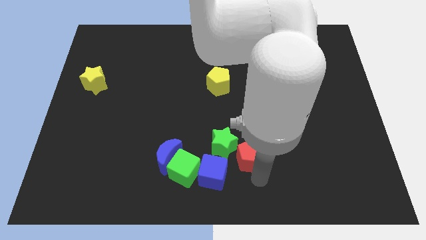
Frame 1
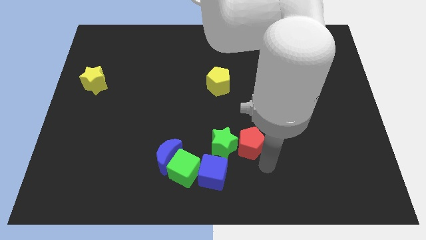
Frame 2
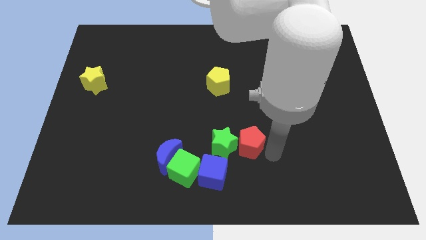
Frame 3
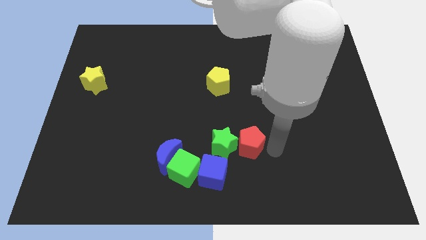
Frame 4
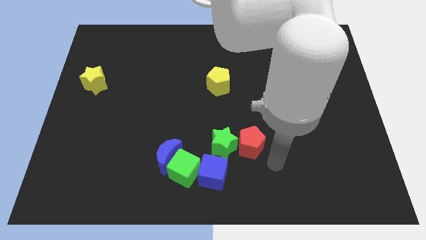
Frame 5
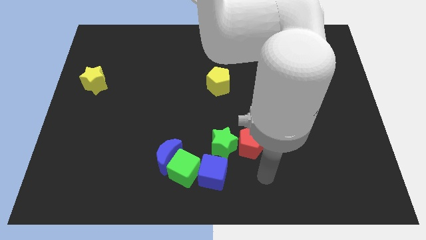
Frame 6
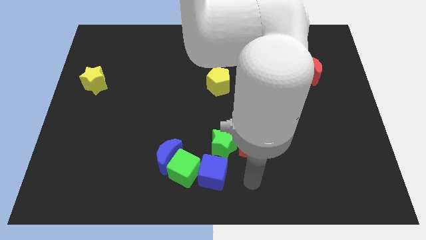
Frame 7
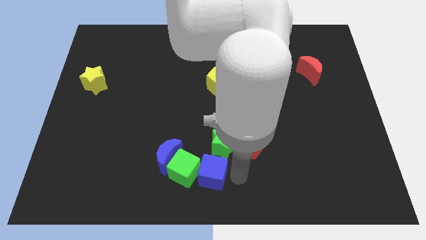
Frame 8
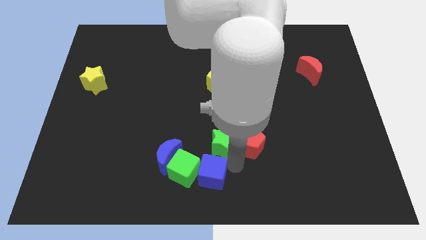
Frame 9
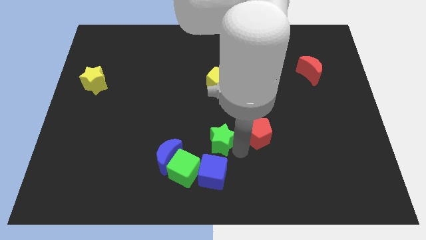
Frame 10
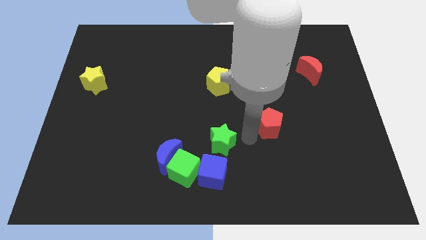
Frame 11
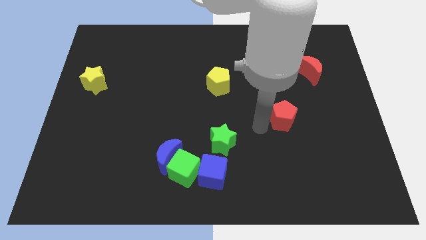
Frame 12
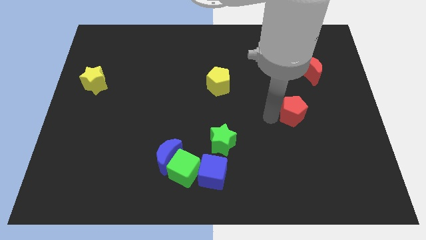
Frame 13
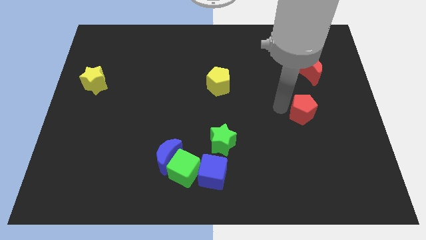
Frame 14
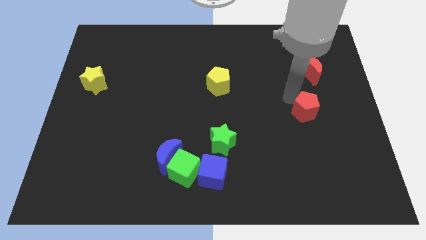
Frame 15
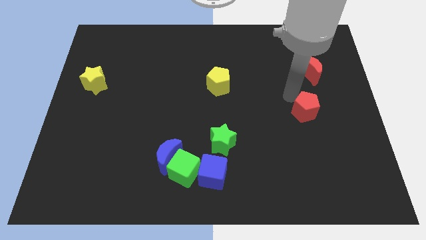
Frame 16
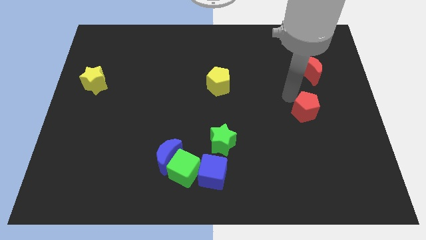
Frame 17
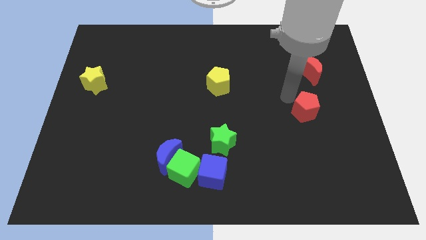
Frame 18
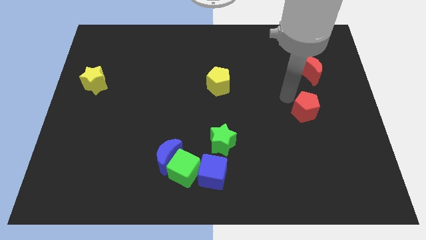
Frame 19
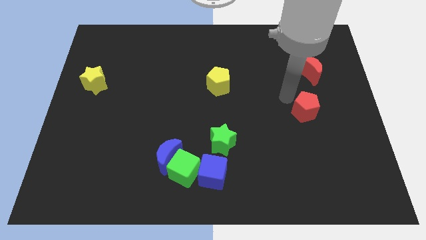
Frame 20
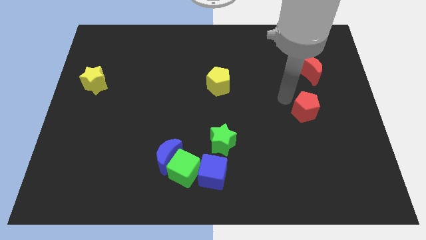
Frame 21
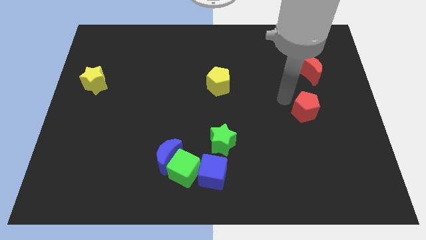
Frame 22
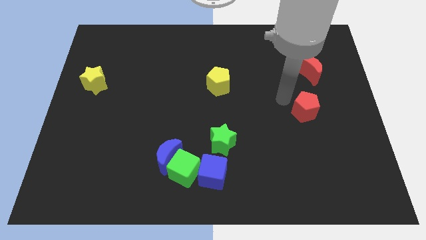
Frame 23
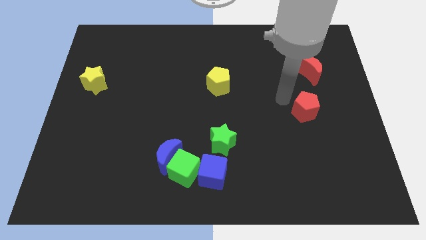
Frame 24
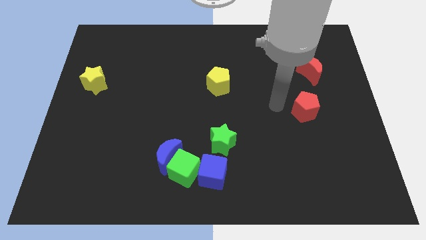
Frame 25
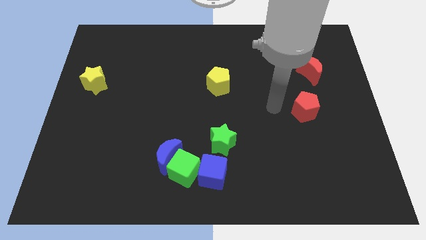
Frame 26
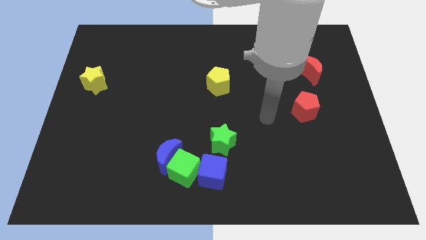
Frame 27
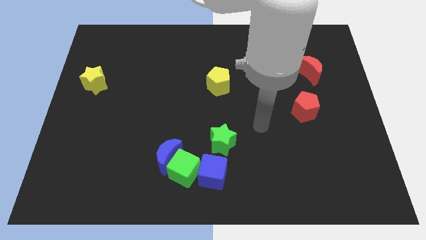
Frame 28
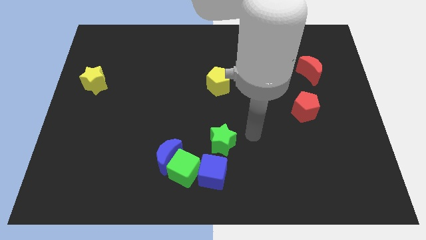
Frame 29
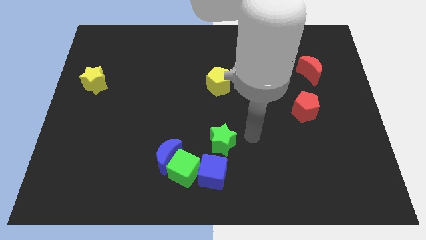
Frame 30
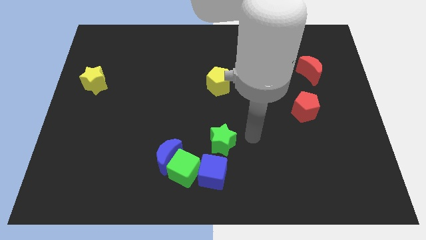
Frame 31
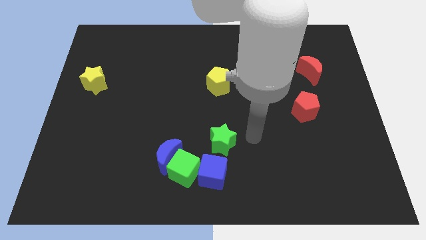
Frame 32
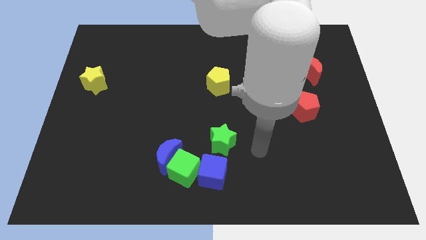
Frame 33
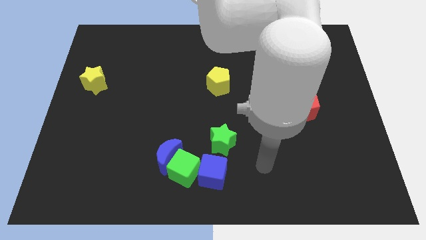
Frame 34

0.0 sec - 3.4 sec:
move the red pentagon to the center

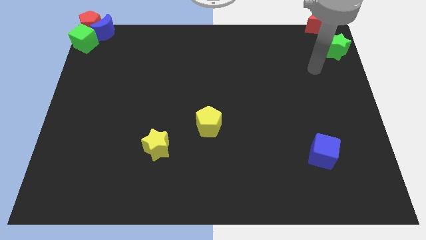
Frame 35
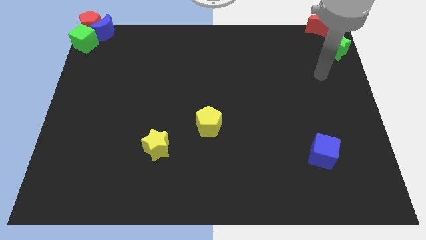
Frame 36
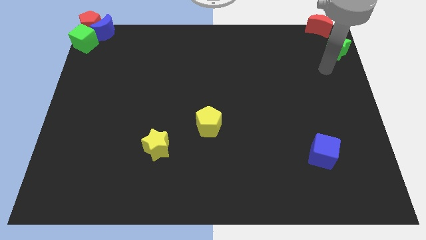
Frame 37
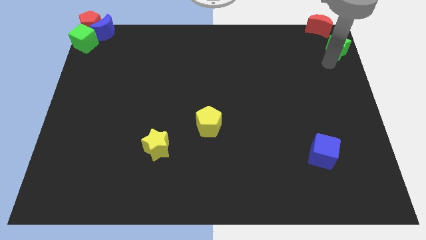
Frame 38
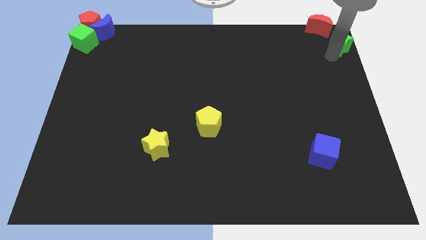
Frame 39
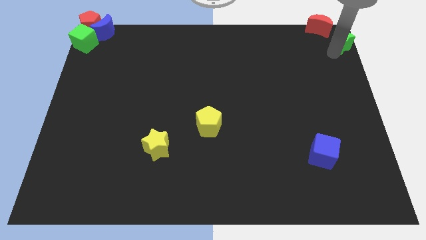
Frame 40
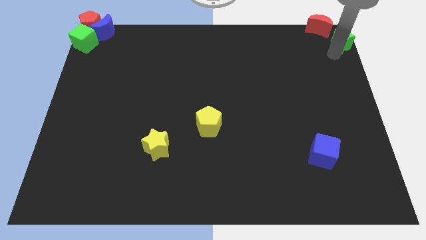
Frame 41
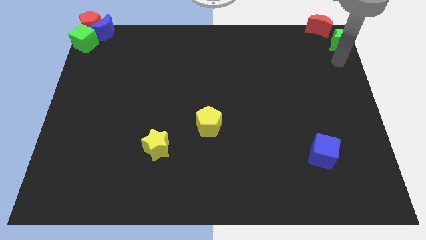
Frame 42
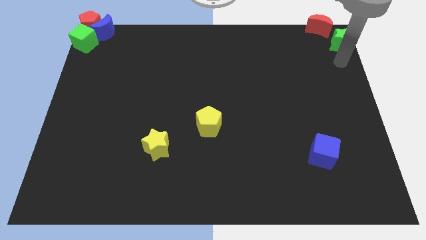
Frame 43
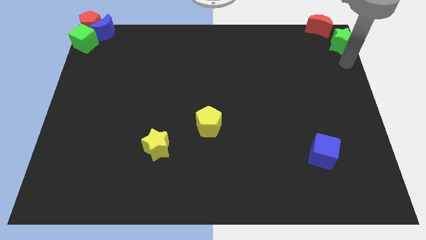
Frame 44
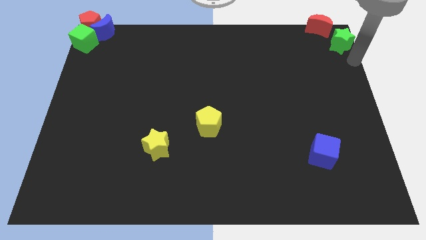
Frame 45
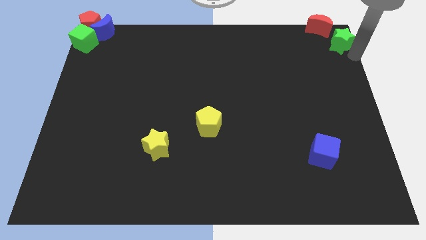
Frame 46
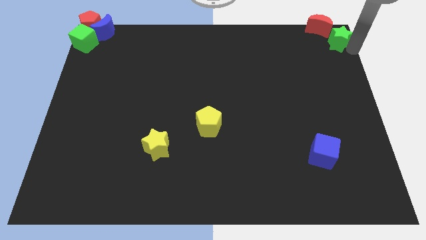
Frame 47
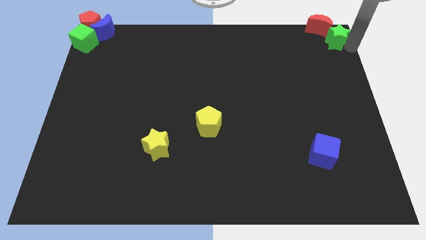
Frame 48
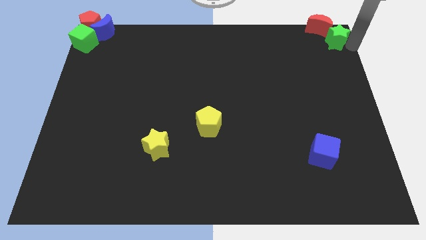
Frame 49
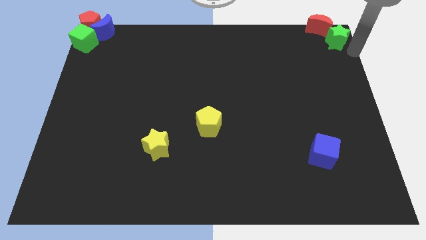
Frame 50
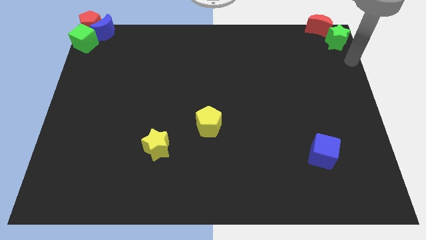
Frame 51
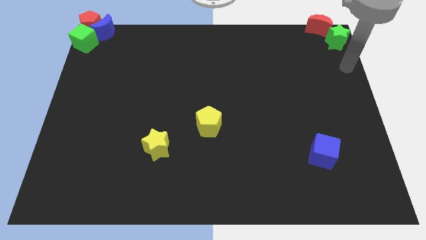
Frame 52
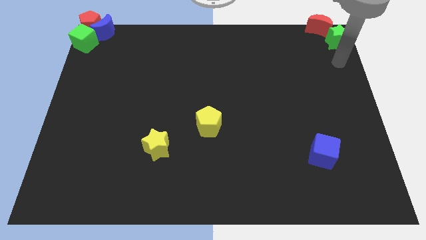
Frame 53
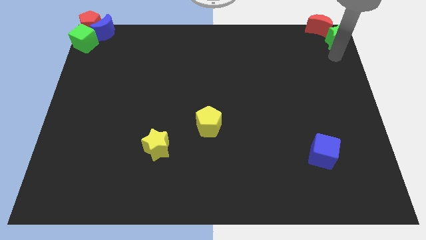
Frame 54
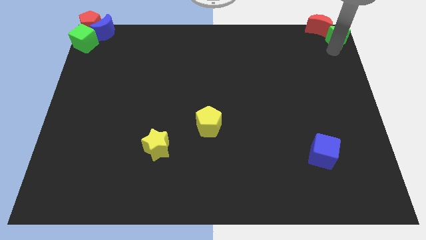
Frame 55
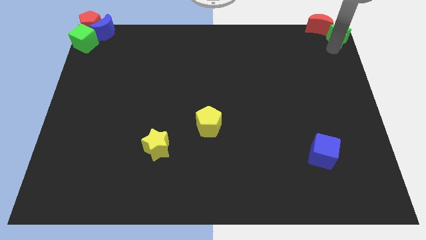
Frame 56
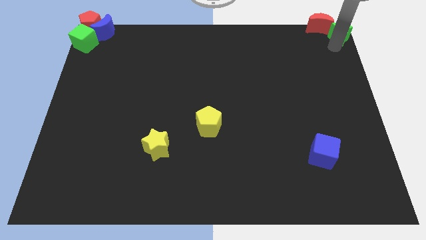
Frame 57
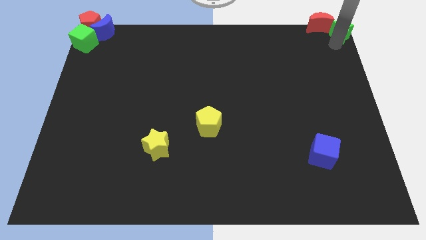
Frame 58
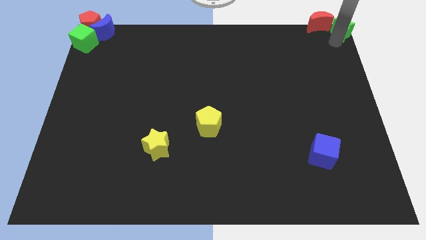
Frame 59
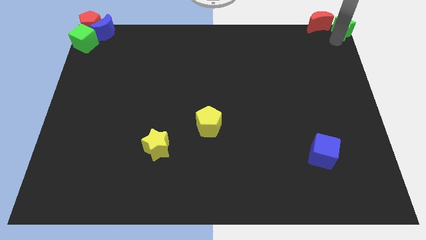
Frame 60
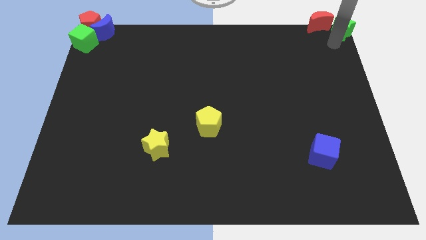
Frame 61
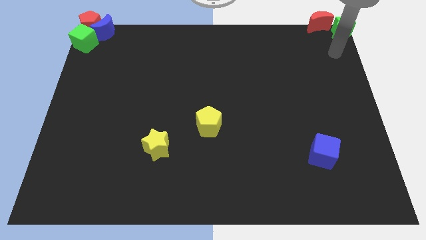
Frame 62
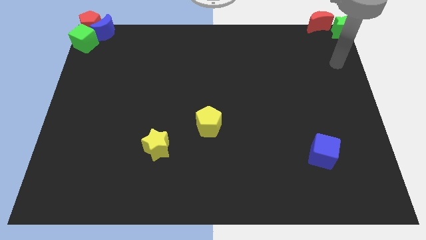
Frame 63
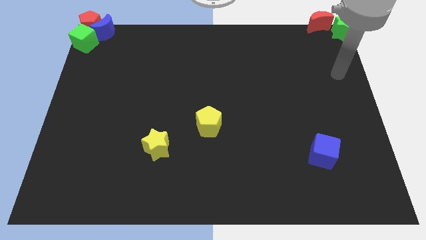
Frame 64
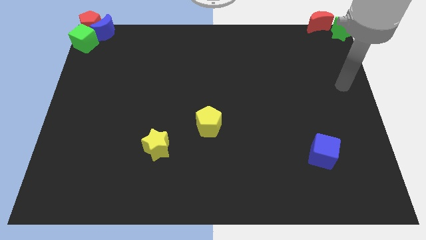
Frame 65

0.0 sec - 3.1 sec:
place green star and red crescent at the top center

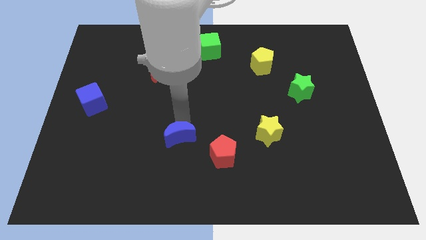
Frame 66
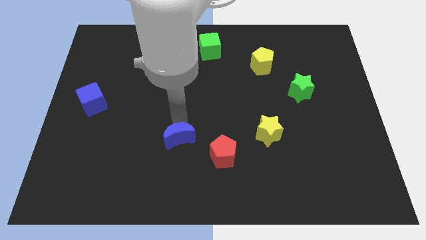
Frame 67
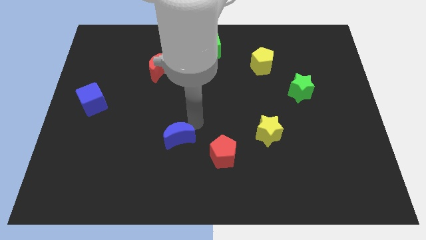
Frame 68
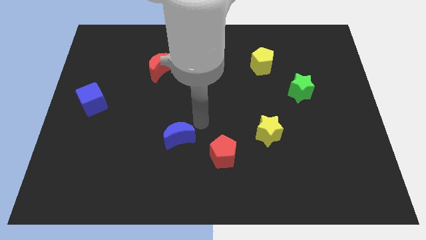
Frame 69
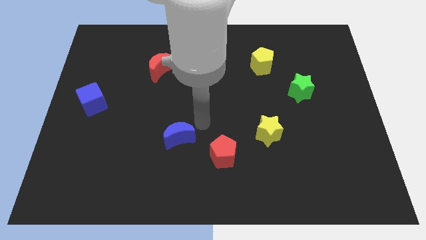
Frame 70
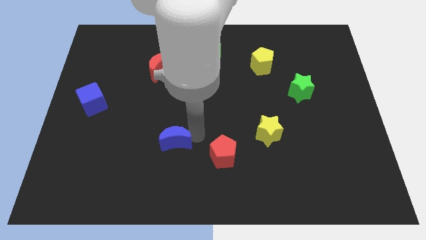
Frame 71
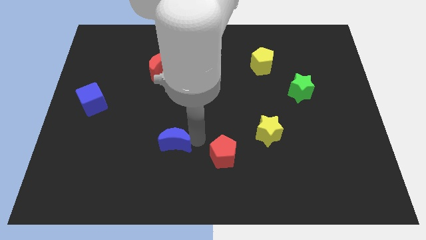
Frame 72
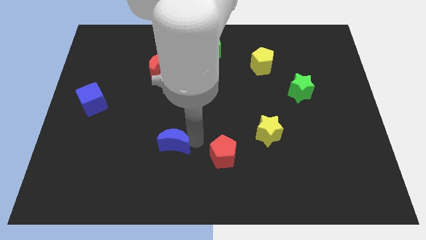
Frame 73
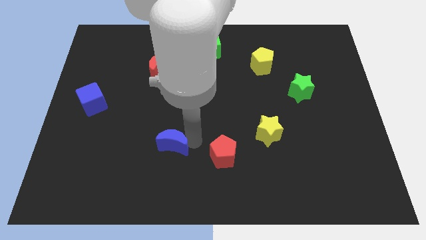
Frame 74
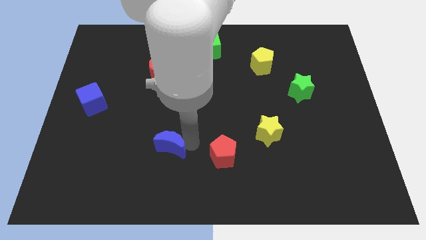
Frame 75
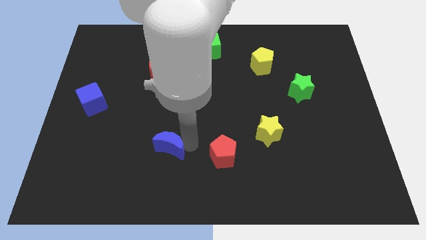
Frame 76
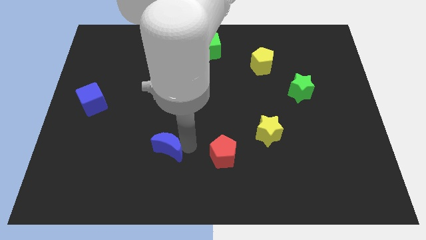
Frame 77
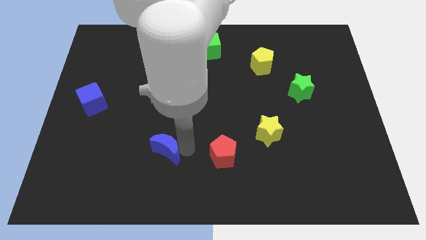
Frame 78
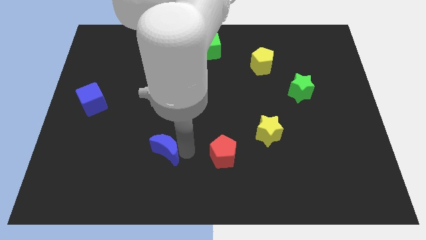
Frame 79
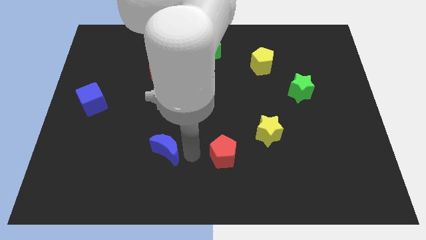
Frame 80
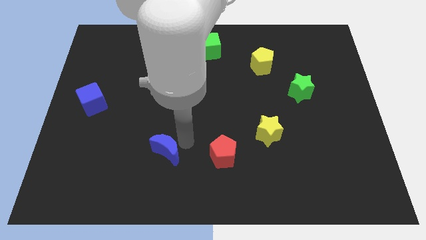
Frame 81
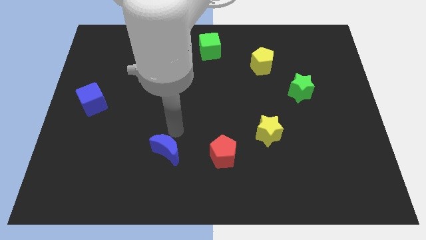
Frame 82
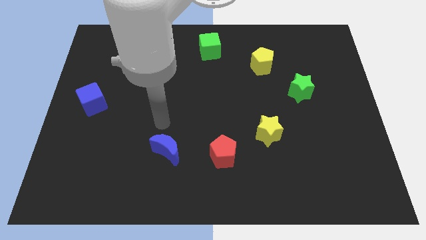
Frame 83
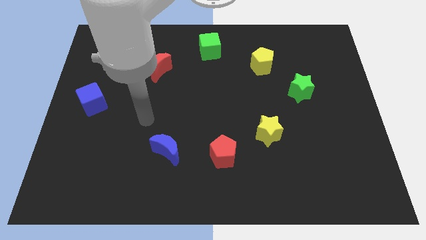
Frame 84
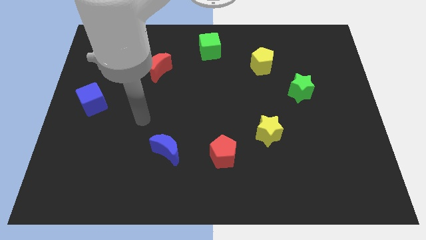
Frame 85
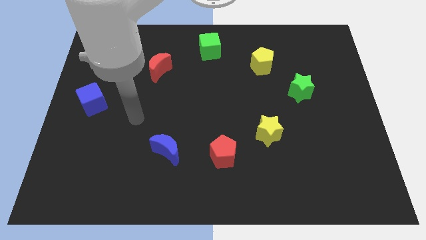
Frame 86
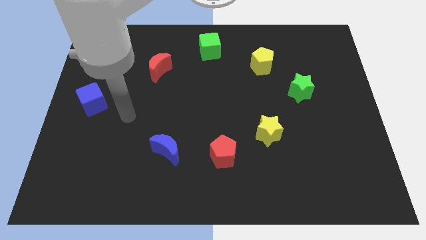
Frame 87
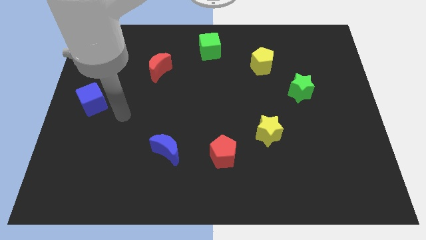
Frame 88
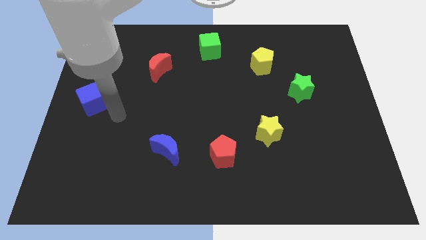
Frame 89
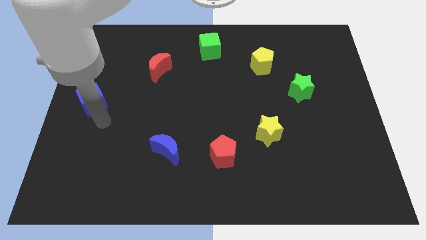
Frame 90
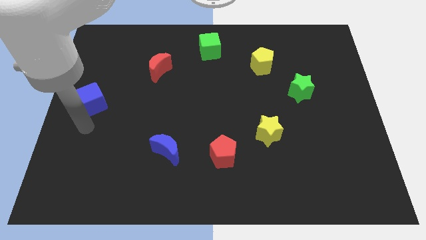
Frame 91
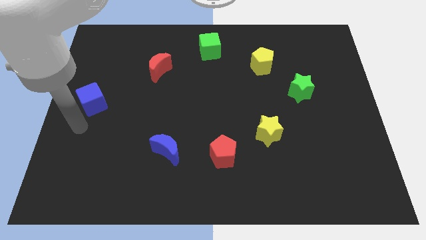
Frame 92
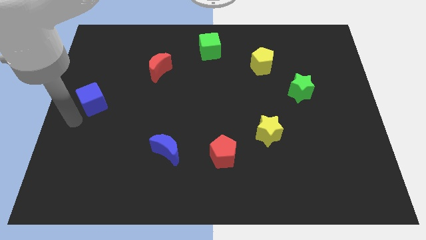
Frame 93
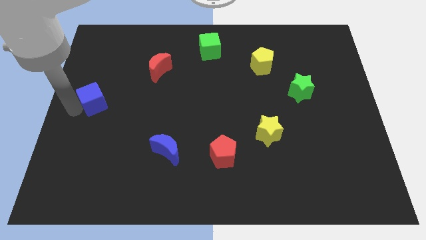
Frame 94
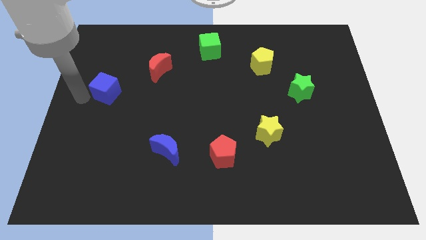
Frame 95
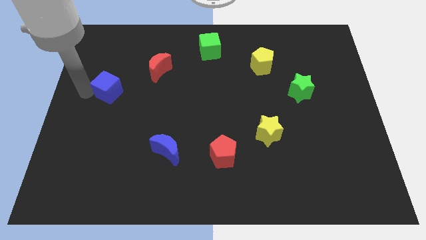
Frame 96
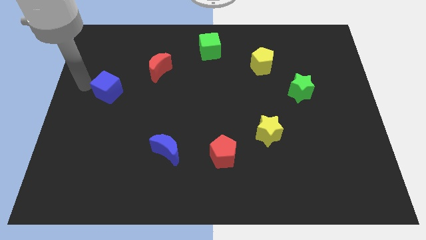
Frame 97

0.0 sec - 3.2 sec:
move the blue semicircle to the left of the red pentagon
